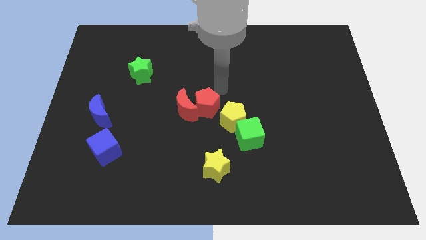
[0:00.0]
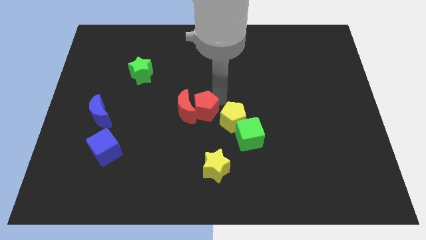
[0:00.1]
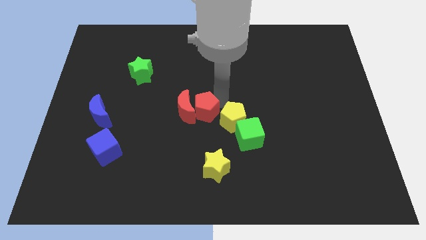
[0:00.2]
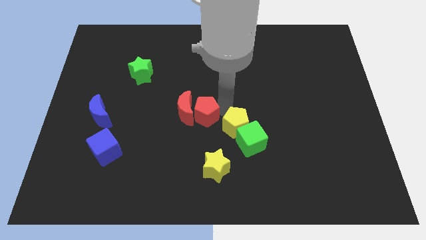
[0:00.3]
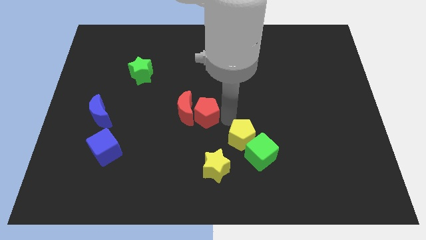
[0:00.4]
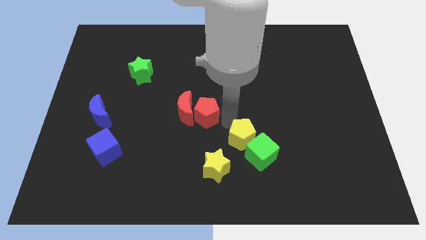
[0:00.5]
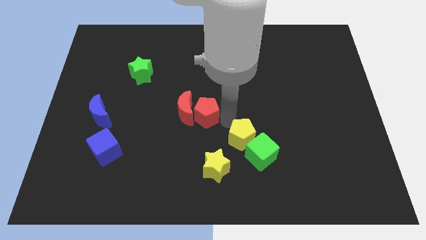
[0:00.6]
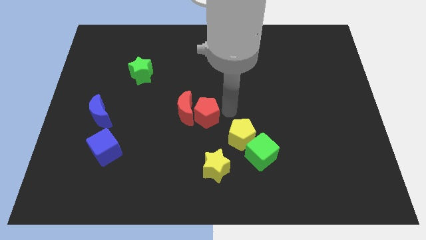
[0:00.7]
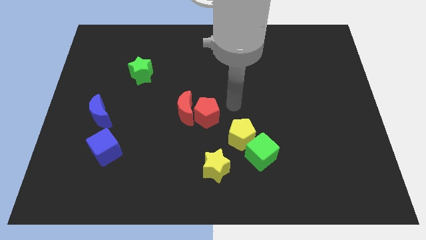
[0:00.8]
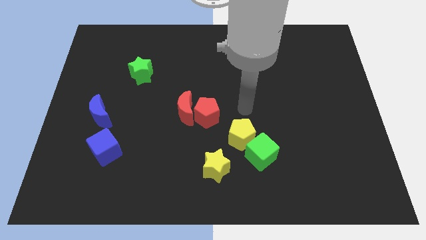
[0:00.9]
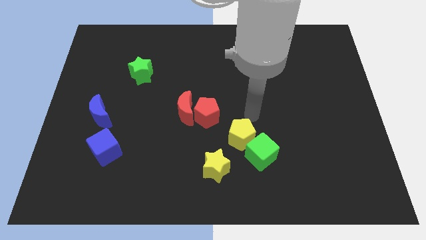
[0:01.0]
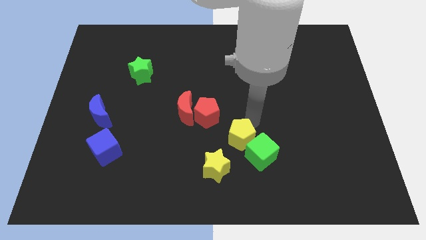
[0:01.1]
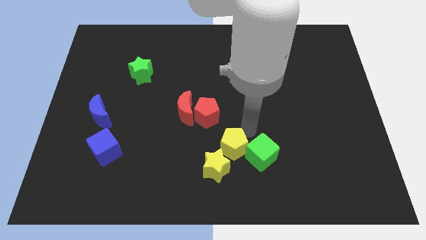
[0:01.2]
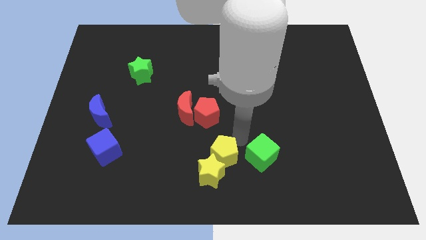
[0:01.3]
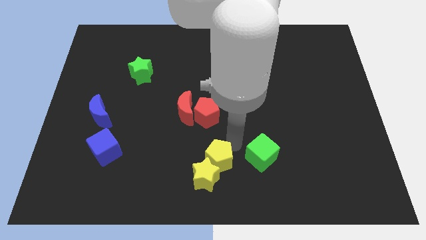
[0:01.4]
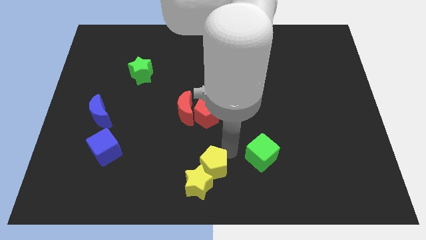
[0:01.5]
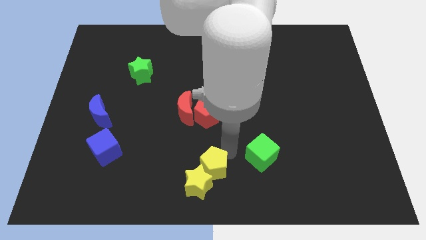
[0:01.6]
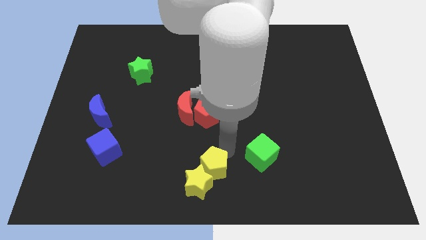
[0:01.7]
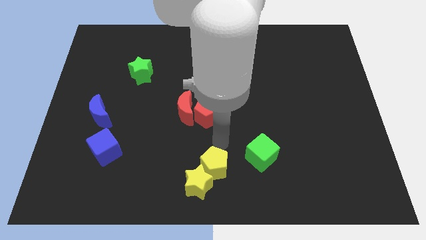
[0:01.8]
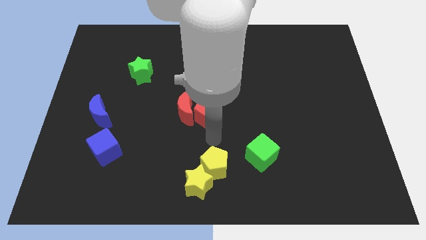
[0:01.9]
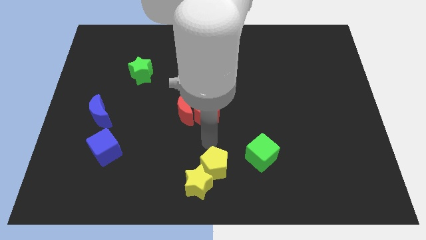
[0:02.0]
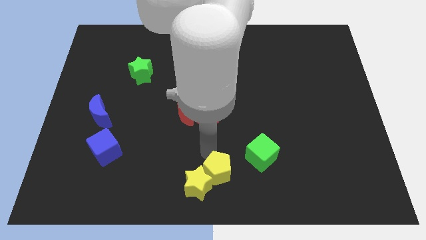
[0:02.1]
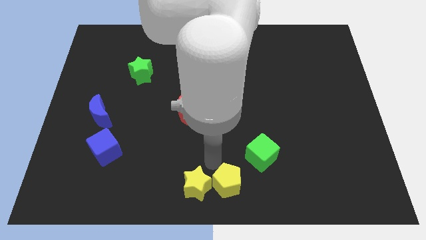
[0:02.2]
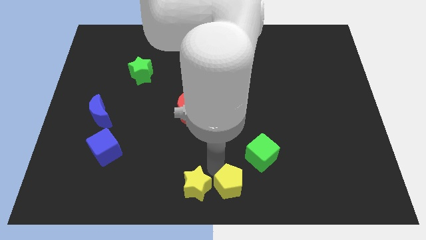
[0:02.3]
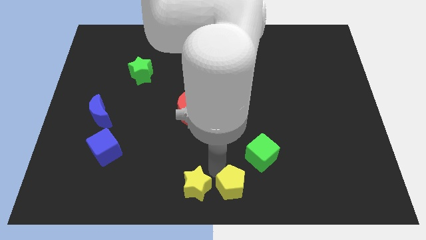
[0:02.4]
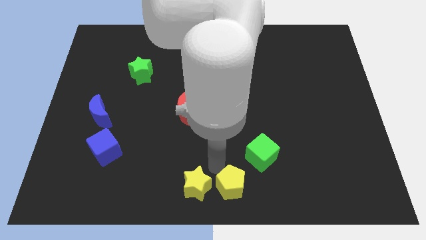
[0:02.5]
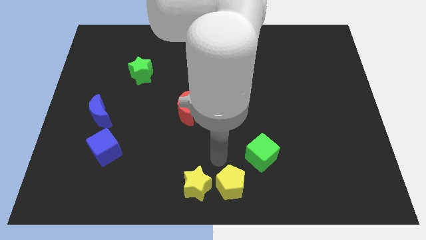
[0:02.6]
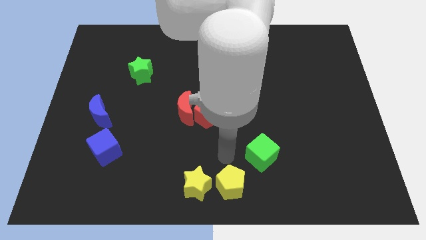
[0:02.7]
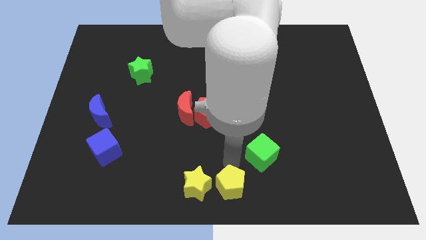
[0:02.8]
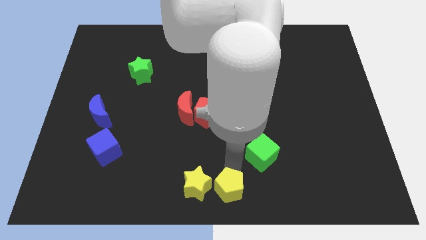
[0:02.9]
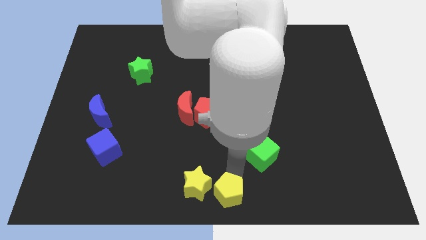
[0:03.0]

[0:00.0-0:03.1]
move the yellow blocks towards the bottom centre of the board

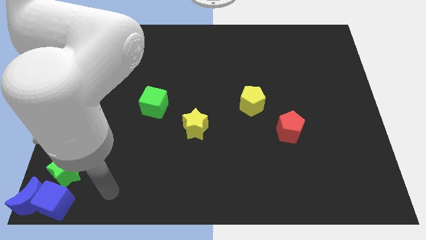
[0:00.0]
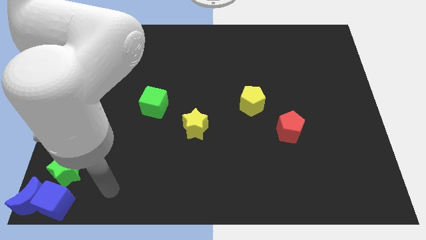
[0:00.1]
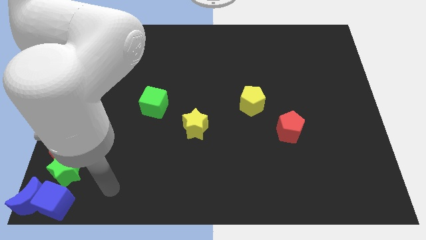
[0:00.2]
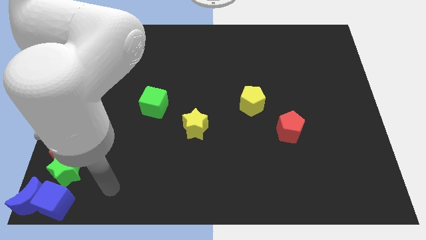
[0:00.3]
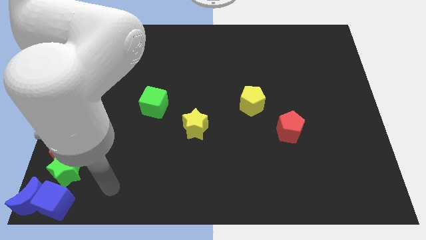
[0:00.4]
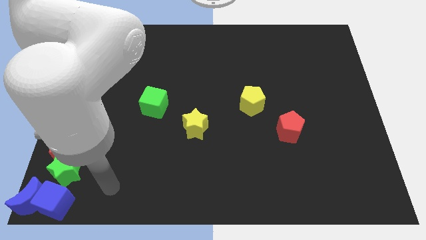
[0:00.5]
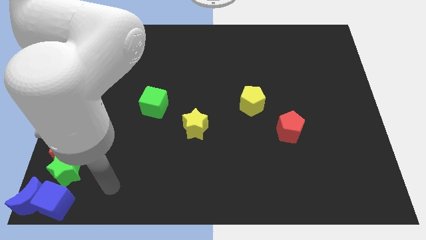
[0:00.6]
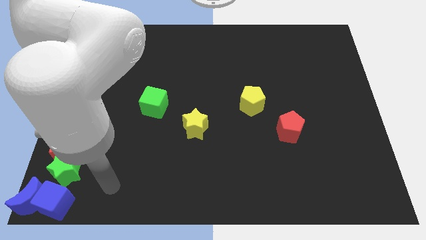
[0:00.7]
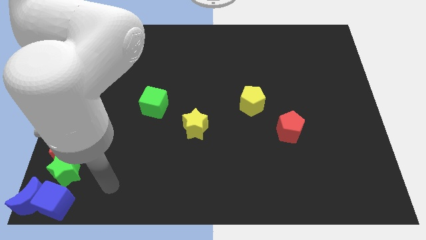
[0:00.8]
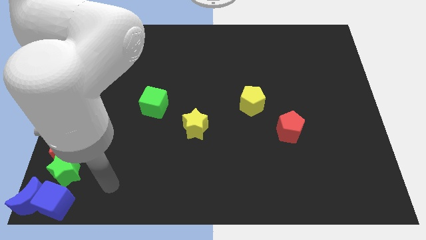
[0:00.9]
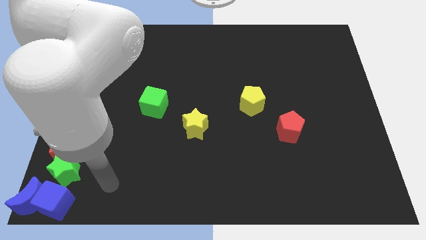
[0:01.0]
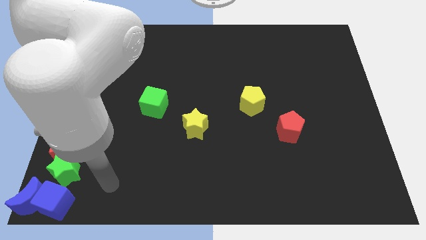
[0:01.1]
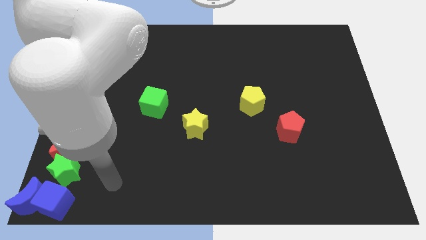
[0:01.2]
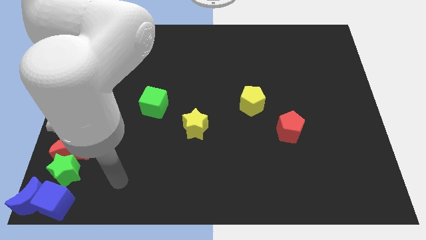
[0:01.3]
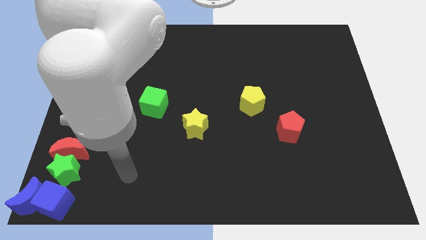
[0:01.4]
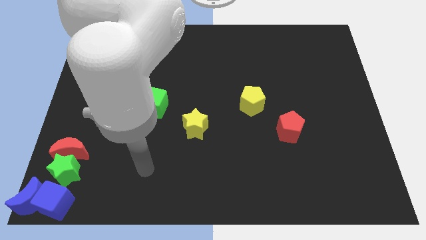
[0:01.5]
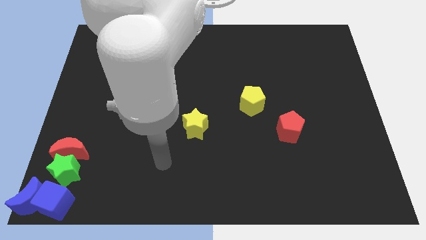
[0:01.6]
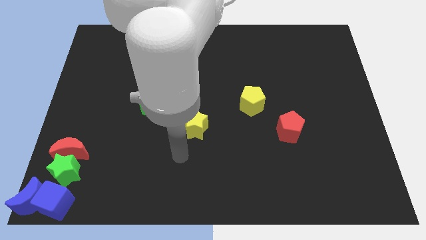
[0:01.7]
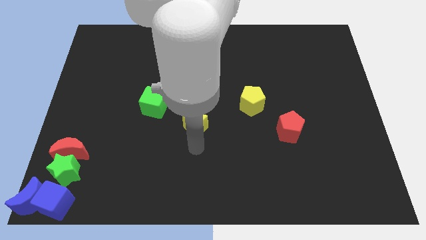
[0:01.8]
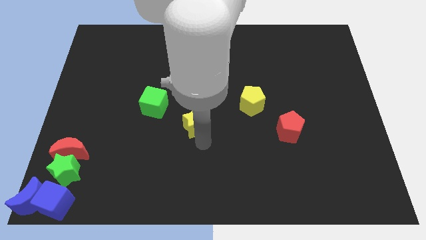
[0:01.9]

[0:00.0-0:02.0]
go near the yellow star

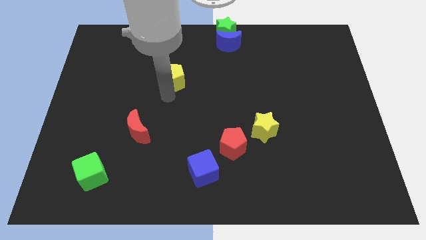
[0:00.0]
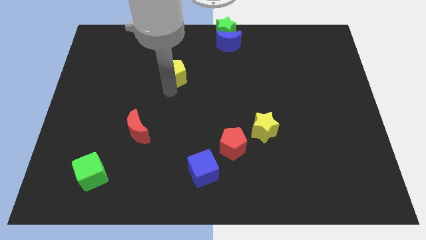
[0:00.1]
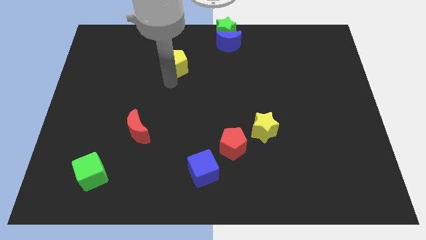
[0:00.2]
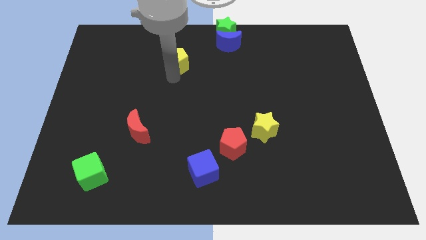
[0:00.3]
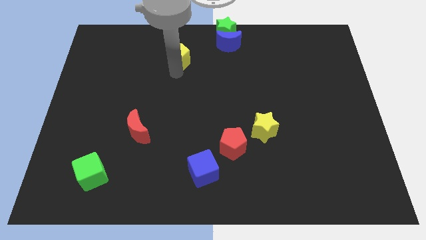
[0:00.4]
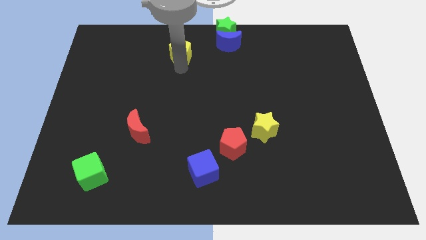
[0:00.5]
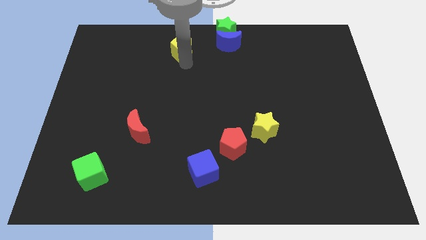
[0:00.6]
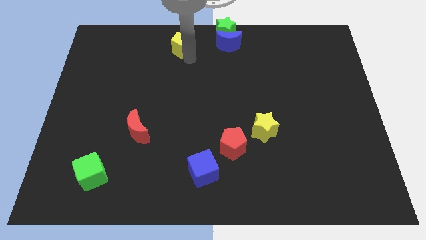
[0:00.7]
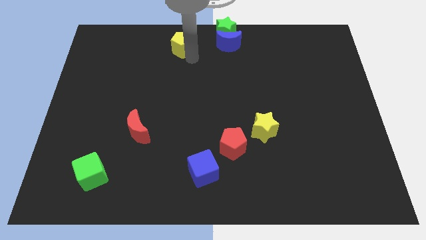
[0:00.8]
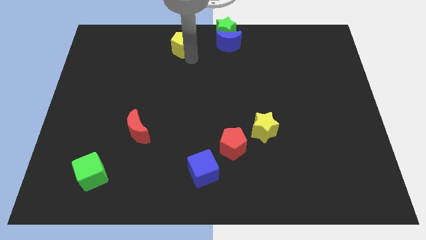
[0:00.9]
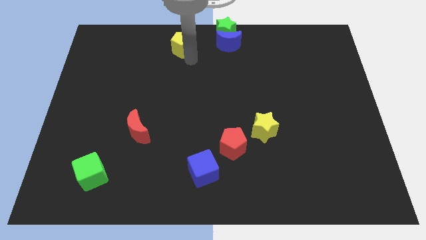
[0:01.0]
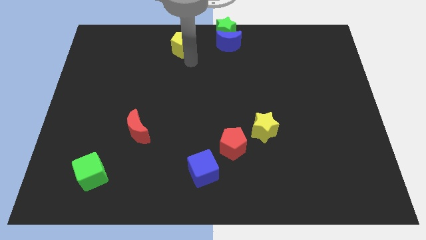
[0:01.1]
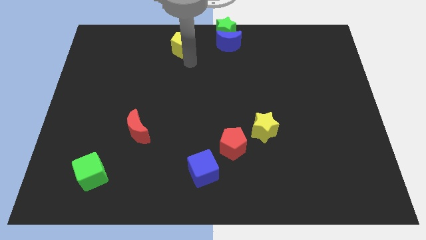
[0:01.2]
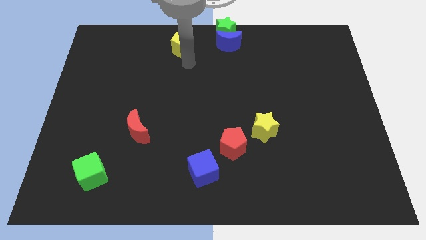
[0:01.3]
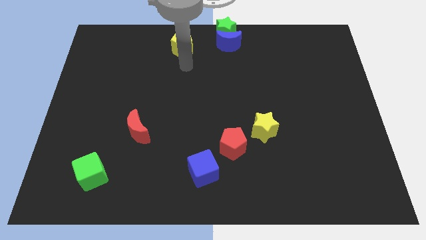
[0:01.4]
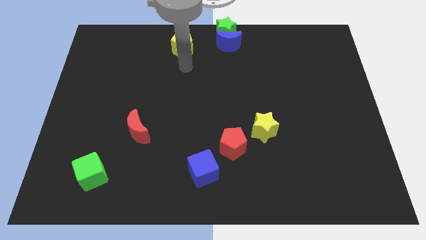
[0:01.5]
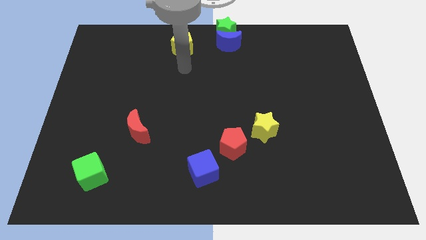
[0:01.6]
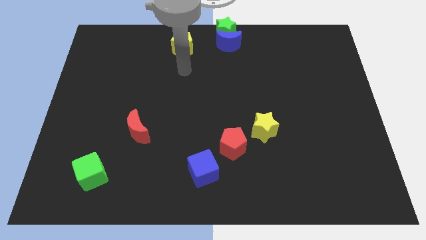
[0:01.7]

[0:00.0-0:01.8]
place yellow pentagon to the left of the blue moon

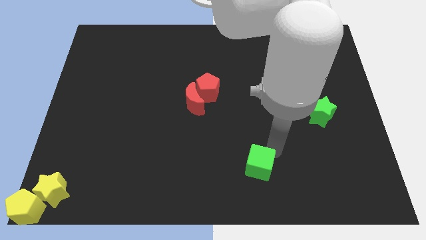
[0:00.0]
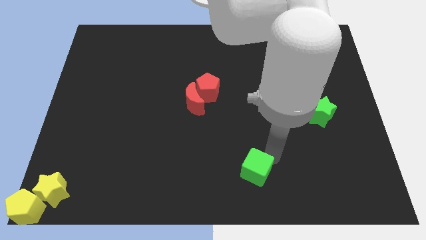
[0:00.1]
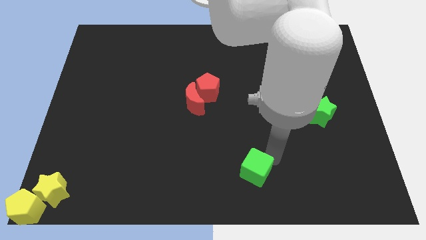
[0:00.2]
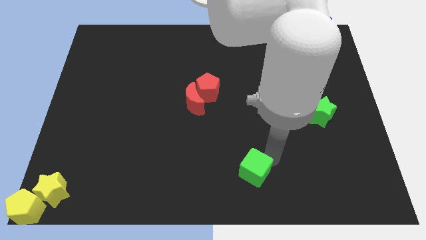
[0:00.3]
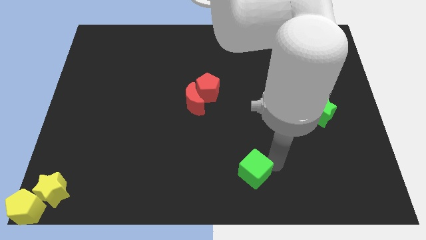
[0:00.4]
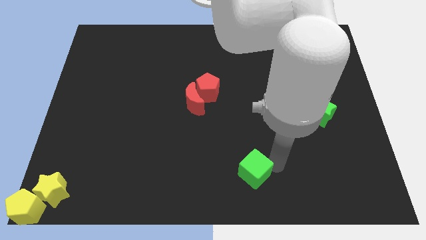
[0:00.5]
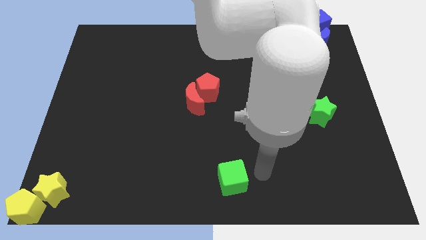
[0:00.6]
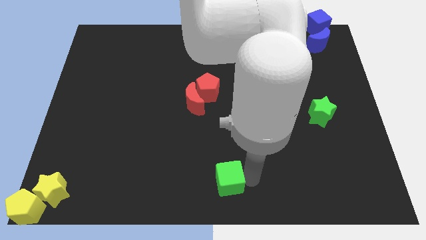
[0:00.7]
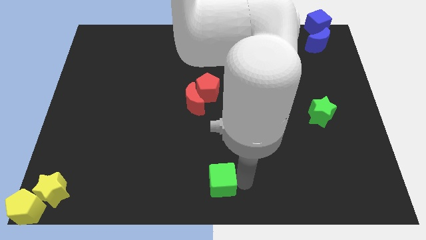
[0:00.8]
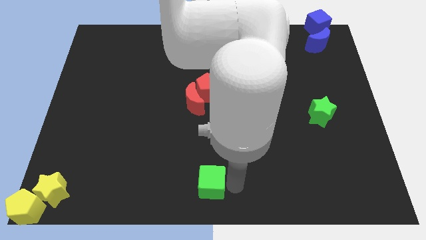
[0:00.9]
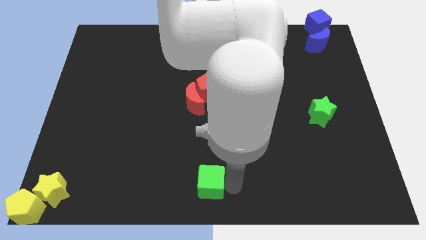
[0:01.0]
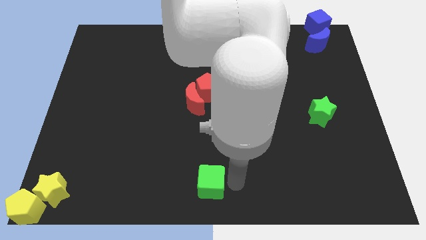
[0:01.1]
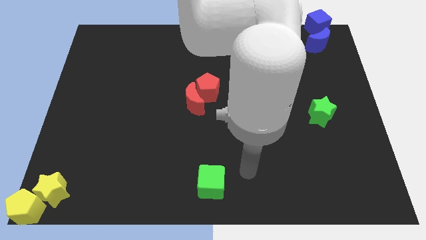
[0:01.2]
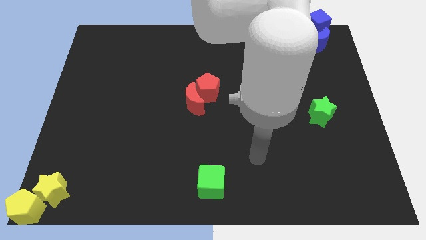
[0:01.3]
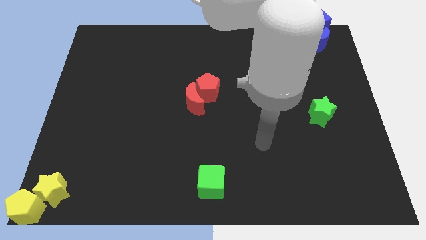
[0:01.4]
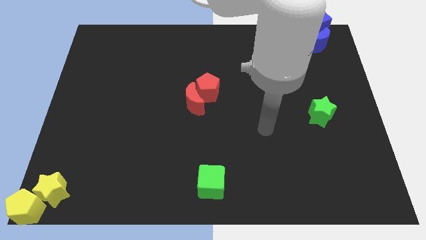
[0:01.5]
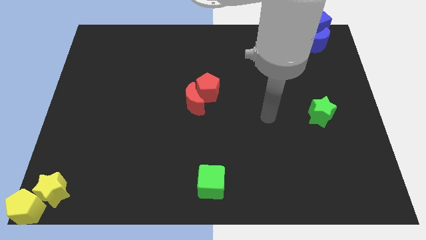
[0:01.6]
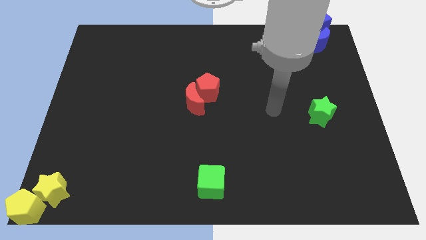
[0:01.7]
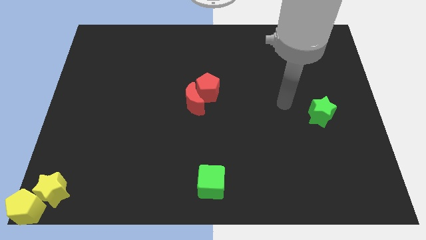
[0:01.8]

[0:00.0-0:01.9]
push the green cube to the bottom center of the board
